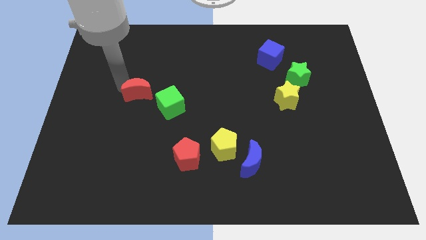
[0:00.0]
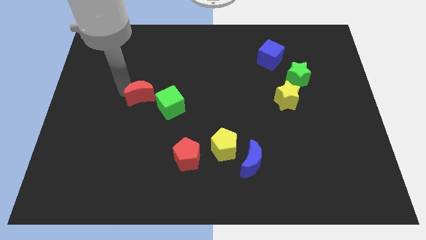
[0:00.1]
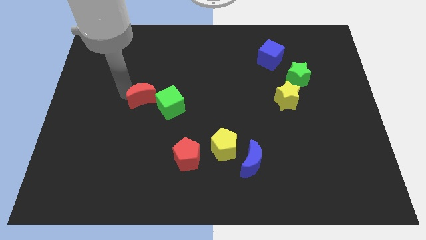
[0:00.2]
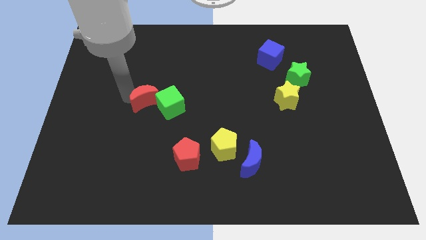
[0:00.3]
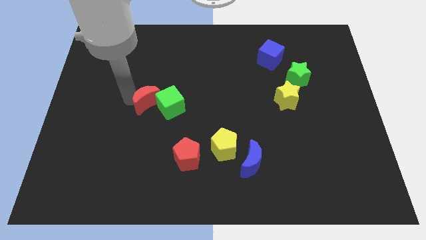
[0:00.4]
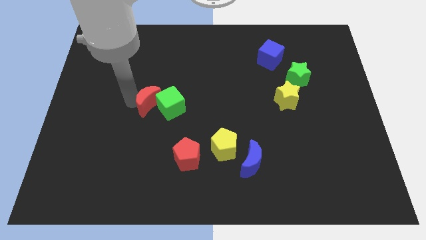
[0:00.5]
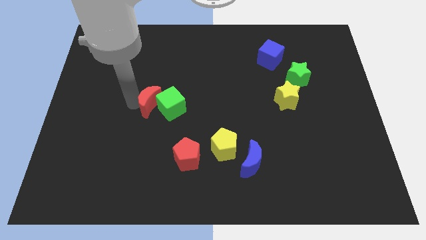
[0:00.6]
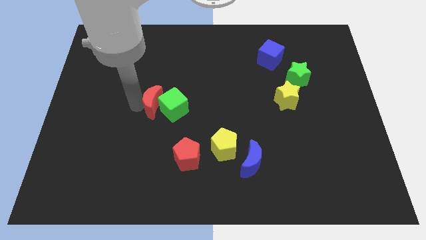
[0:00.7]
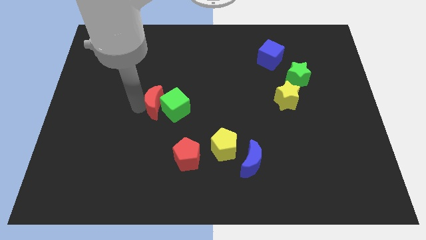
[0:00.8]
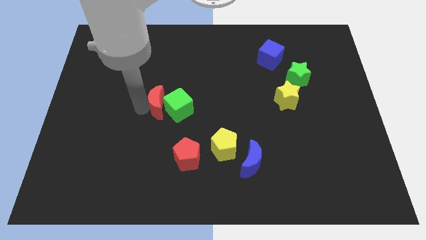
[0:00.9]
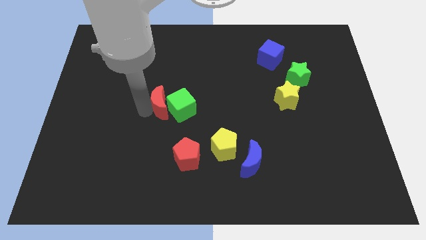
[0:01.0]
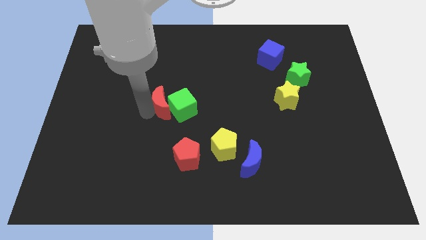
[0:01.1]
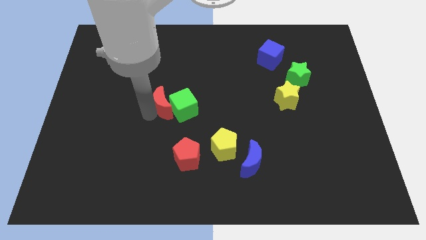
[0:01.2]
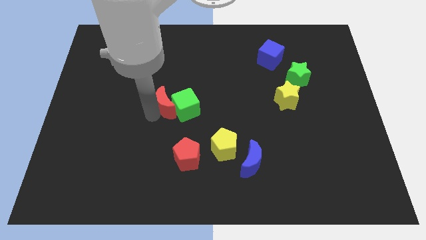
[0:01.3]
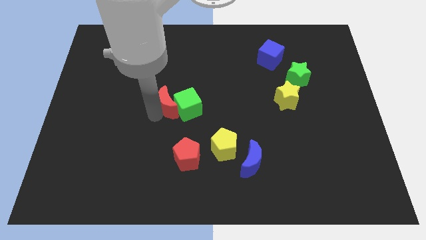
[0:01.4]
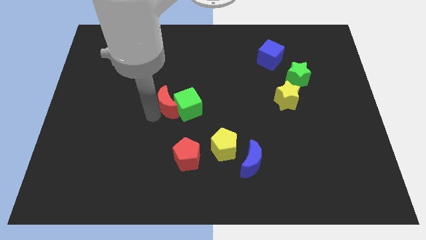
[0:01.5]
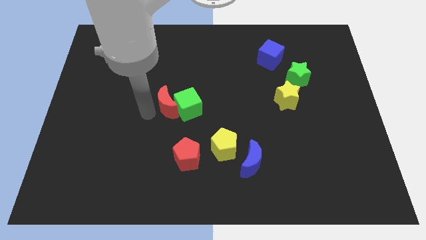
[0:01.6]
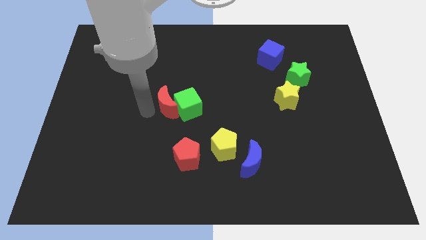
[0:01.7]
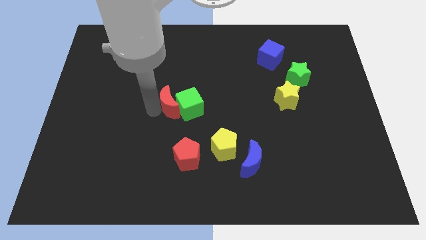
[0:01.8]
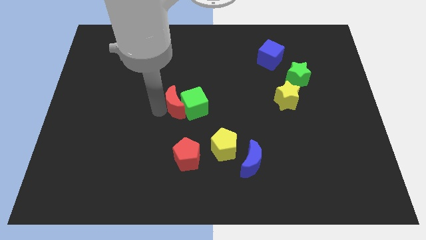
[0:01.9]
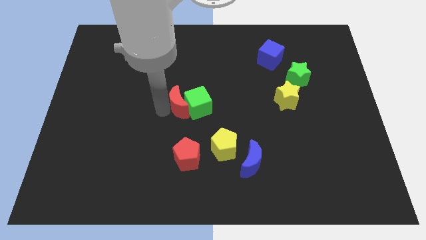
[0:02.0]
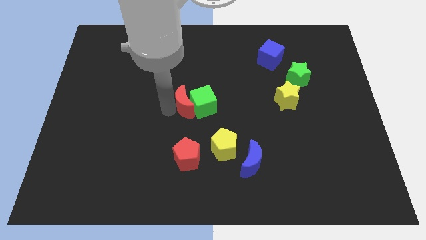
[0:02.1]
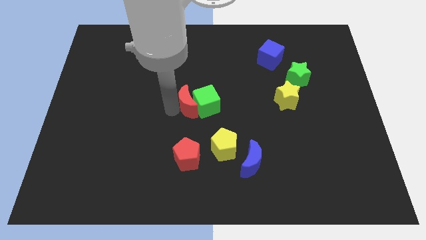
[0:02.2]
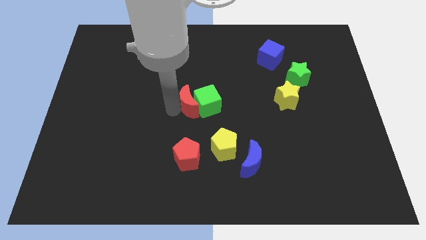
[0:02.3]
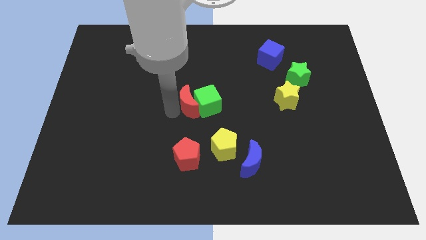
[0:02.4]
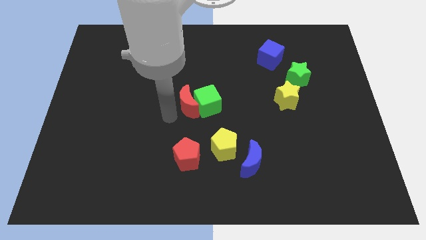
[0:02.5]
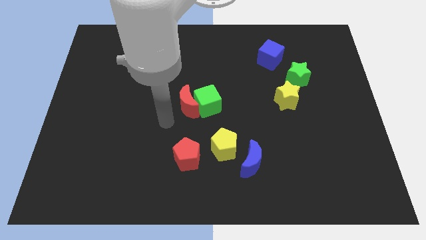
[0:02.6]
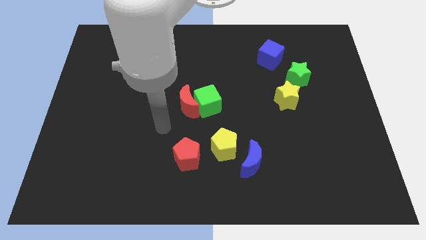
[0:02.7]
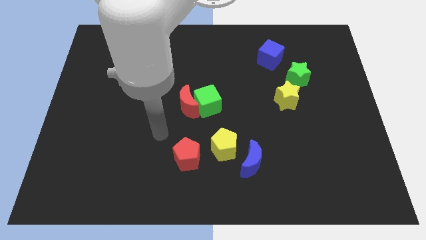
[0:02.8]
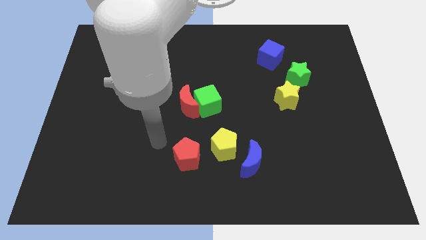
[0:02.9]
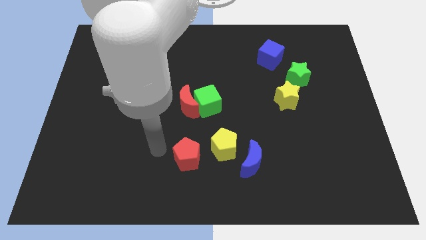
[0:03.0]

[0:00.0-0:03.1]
place the red crescent and green cube together at center of the board

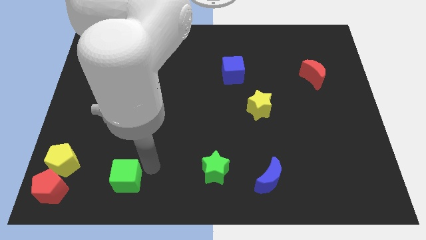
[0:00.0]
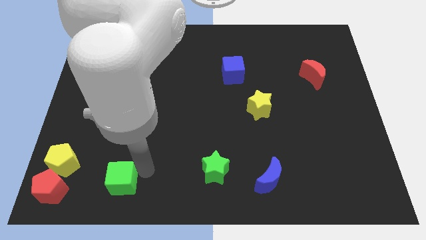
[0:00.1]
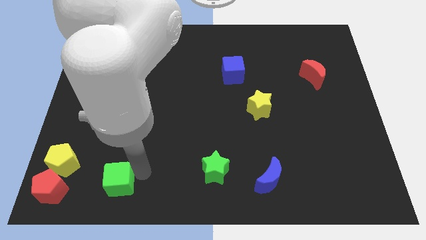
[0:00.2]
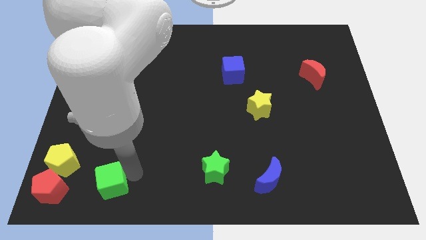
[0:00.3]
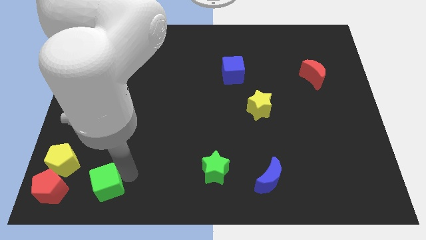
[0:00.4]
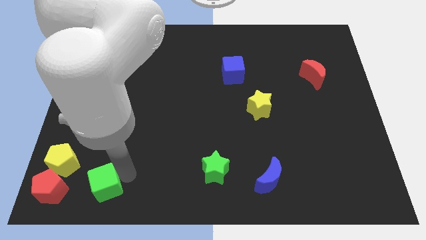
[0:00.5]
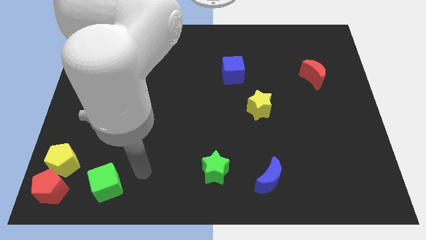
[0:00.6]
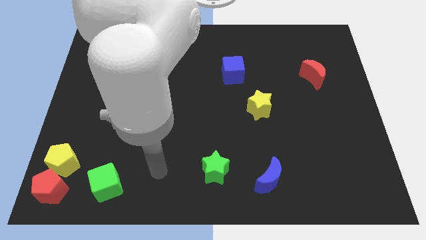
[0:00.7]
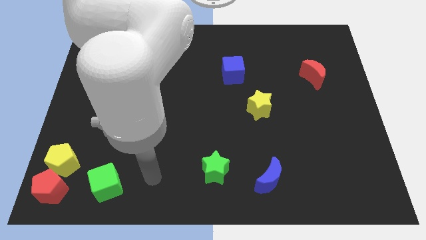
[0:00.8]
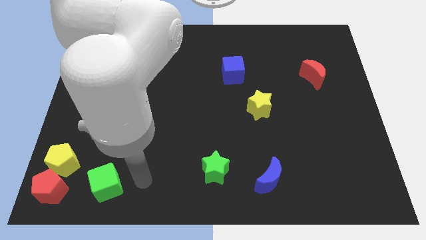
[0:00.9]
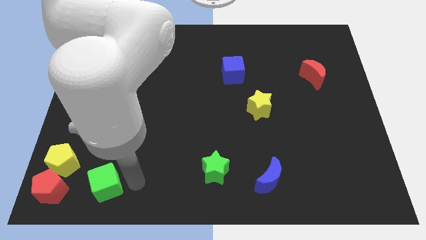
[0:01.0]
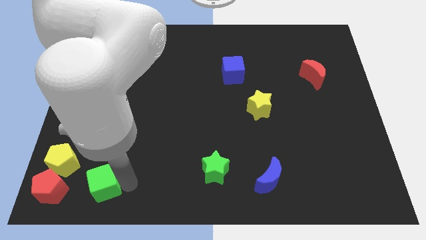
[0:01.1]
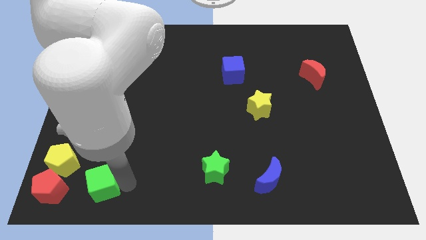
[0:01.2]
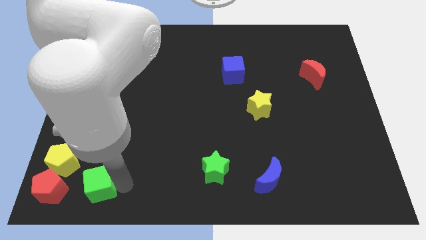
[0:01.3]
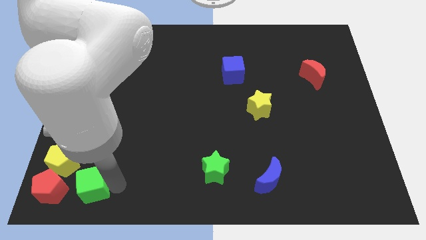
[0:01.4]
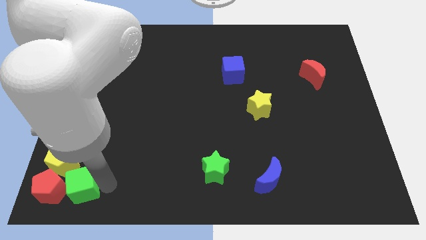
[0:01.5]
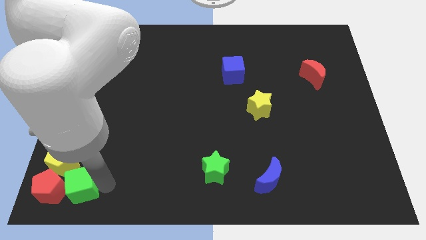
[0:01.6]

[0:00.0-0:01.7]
move the green cube close to the red pentagon

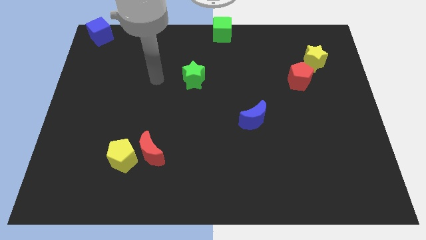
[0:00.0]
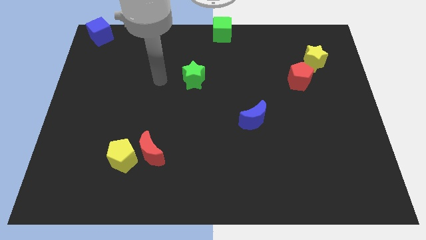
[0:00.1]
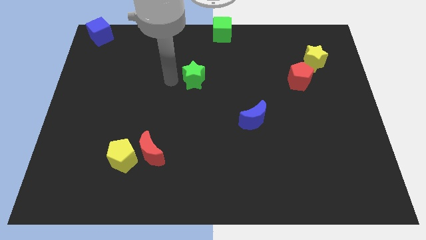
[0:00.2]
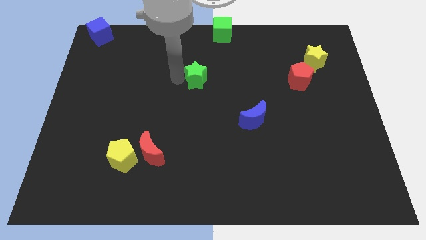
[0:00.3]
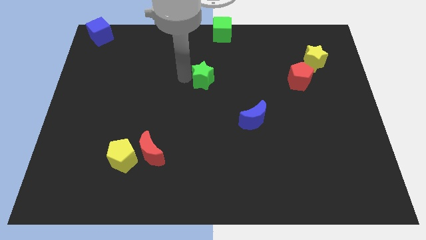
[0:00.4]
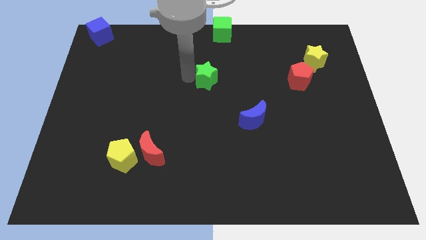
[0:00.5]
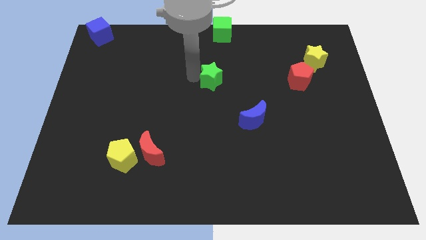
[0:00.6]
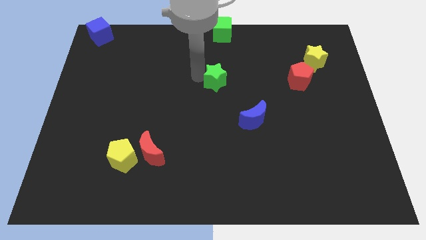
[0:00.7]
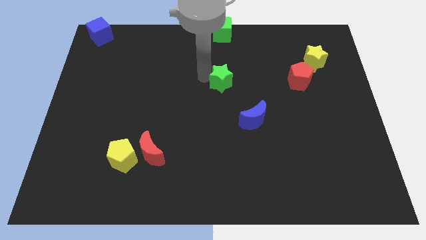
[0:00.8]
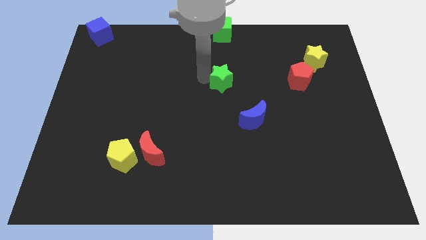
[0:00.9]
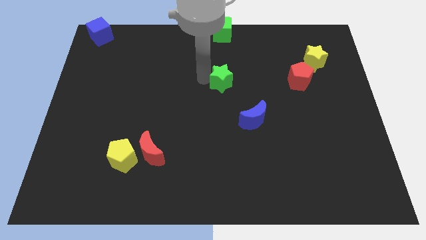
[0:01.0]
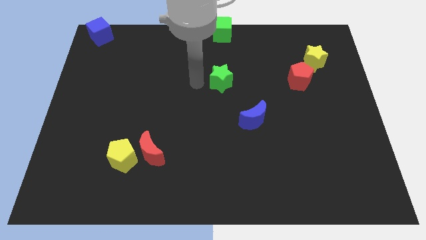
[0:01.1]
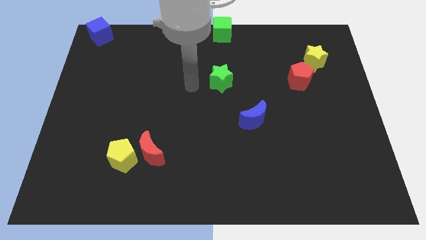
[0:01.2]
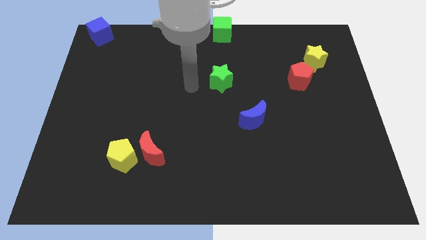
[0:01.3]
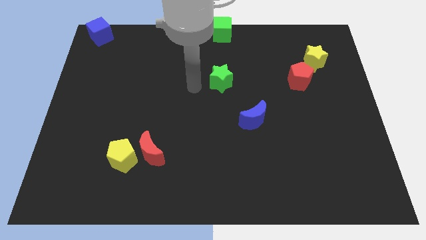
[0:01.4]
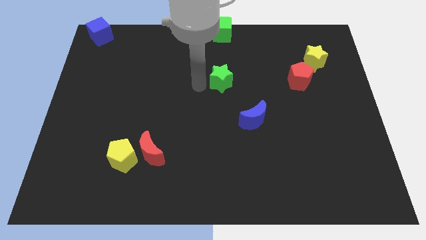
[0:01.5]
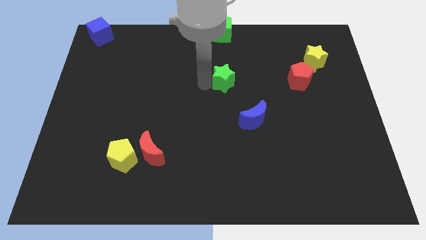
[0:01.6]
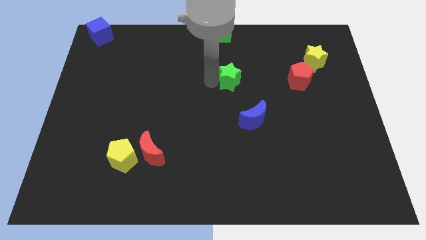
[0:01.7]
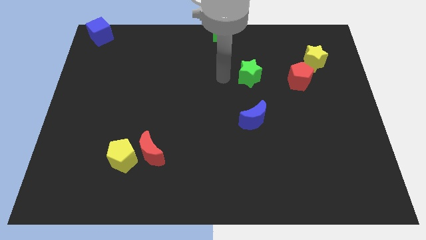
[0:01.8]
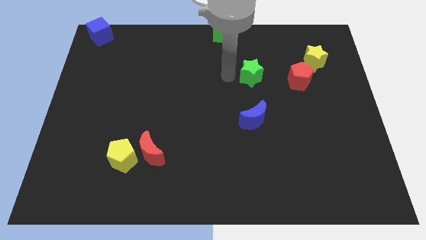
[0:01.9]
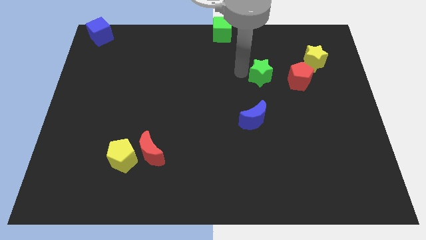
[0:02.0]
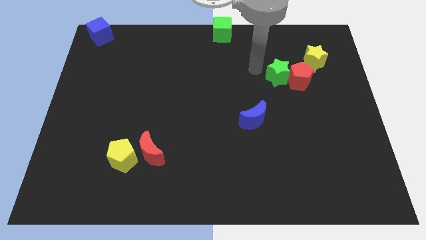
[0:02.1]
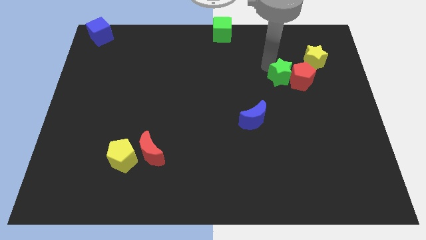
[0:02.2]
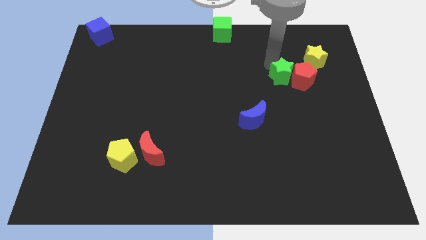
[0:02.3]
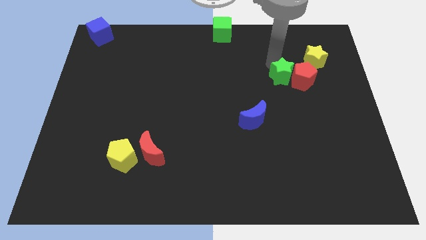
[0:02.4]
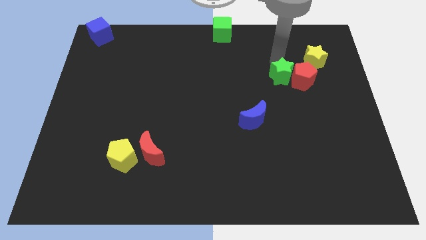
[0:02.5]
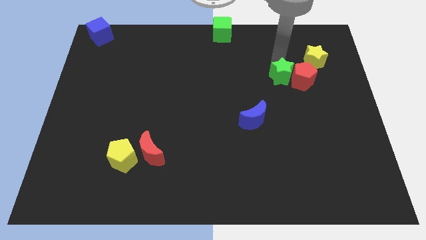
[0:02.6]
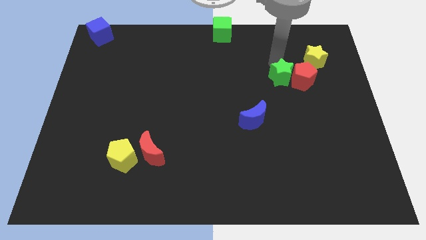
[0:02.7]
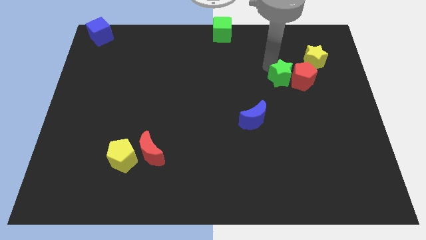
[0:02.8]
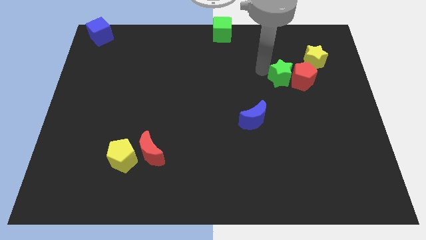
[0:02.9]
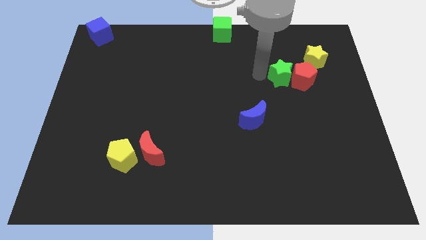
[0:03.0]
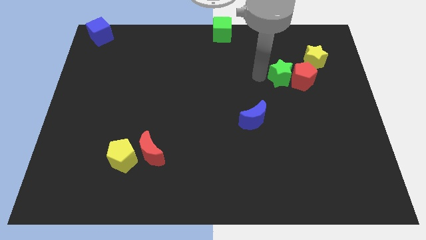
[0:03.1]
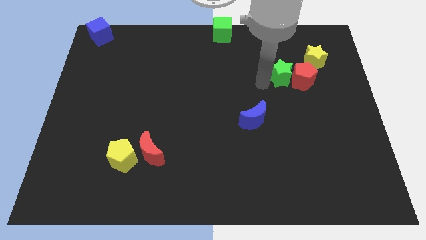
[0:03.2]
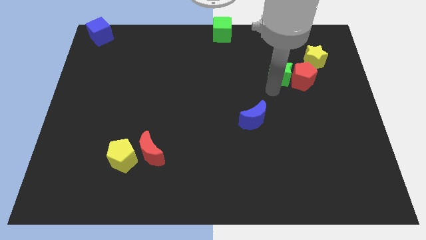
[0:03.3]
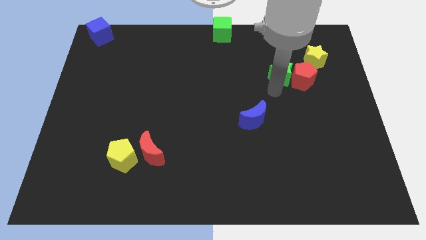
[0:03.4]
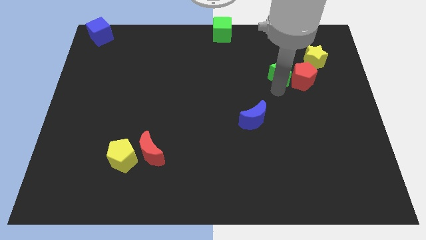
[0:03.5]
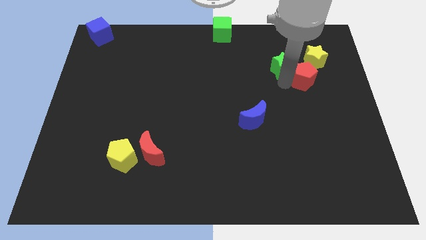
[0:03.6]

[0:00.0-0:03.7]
push green star towards red pentagon

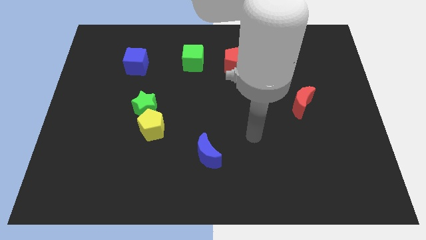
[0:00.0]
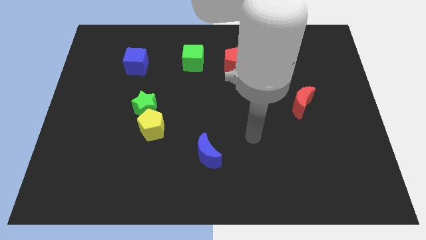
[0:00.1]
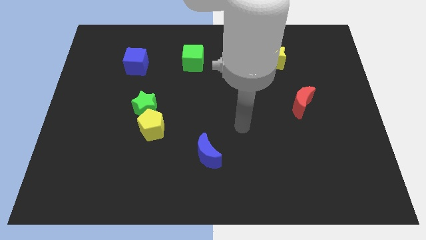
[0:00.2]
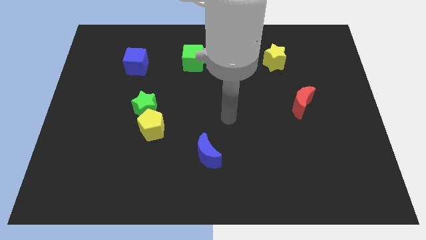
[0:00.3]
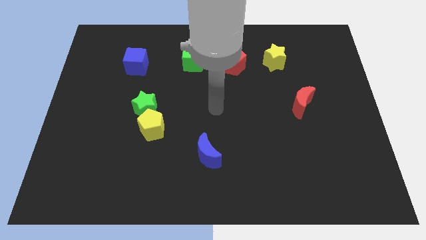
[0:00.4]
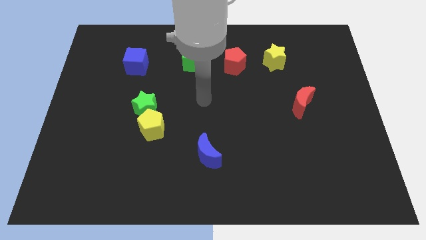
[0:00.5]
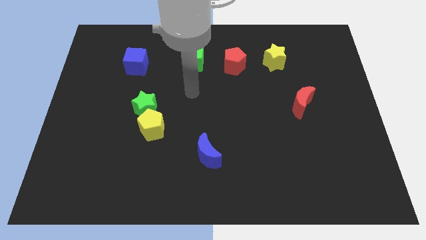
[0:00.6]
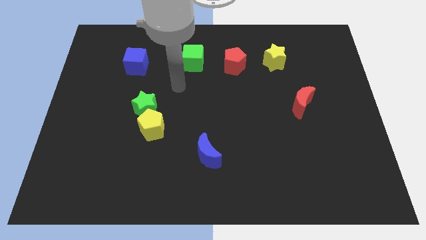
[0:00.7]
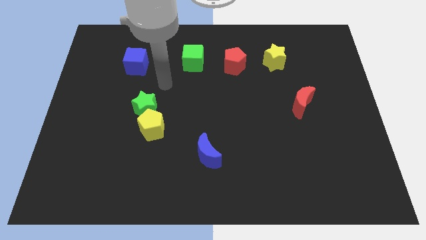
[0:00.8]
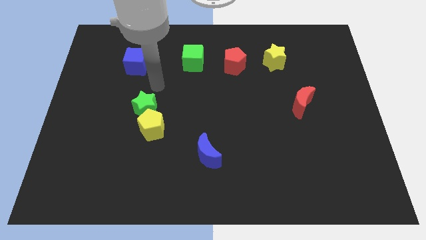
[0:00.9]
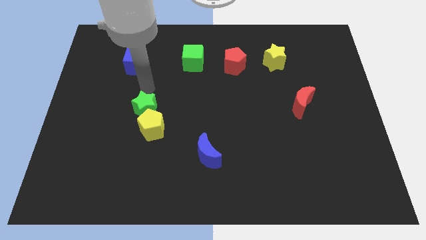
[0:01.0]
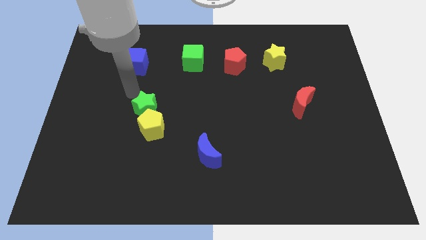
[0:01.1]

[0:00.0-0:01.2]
place your arm at the top of the green star
